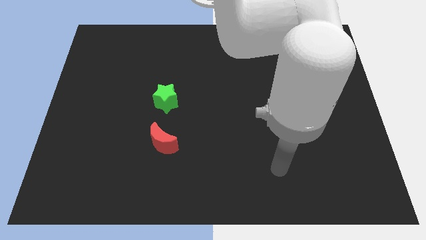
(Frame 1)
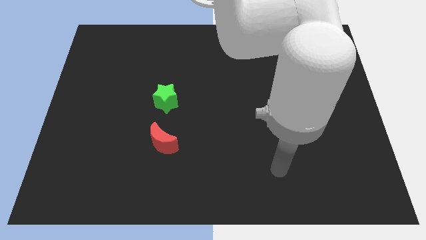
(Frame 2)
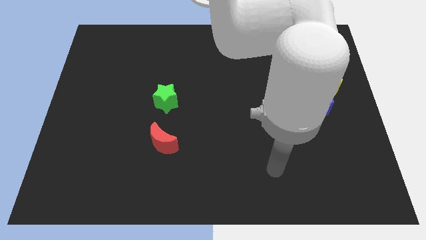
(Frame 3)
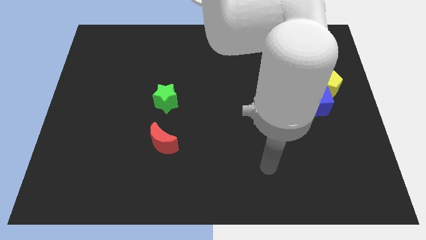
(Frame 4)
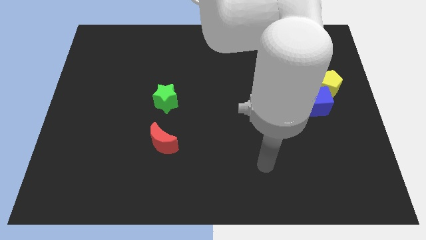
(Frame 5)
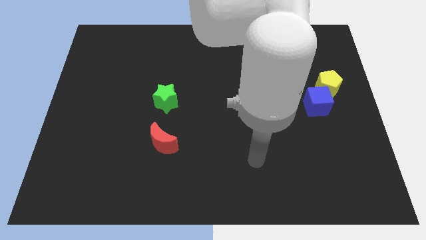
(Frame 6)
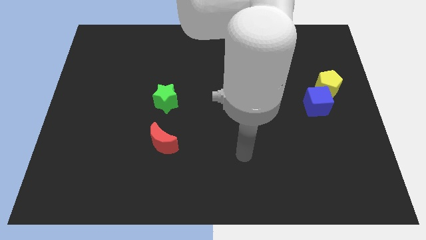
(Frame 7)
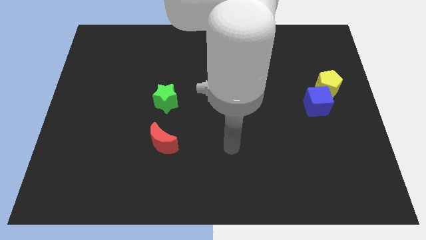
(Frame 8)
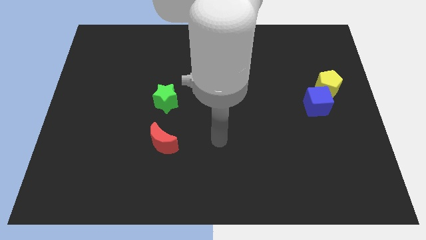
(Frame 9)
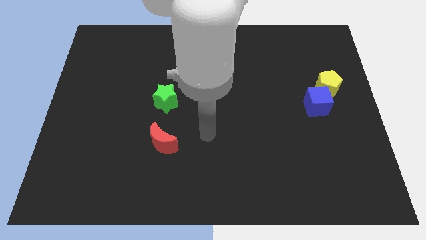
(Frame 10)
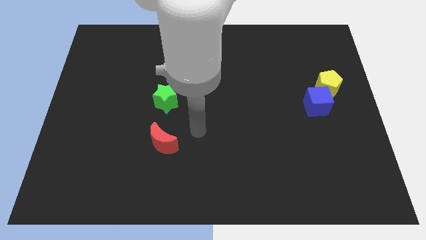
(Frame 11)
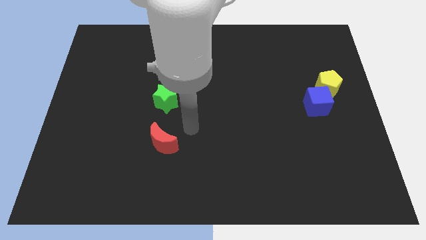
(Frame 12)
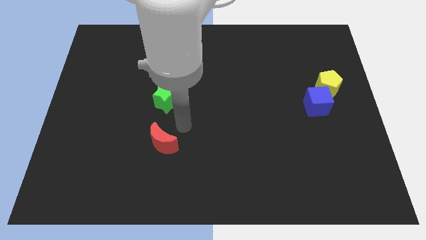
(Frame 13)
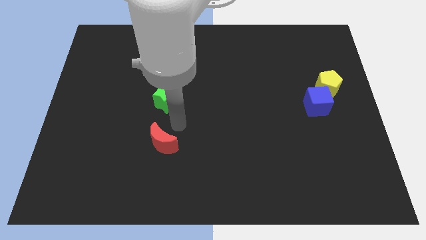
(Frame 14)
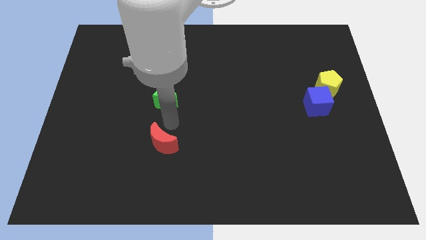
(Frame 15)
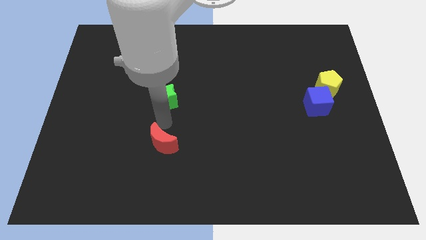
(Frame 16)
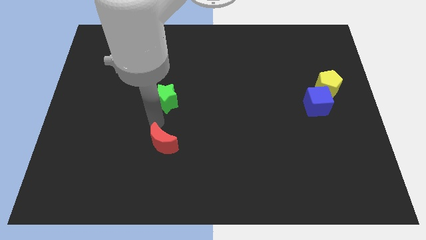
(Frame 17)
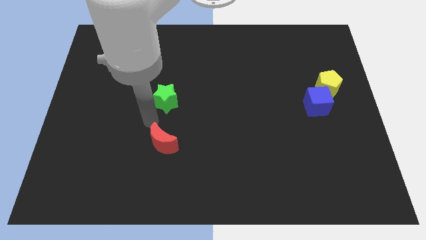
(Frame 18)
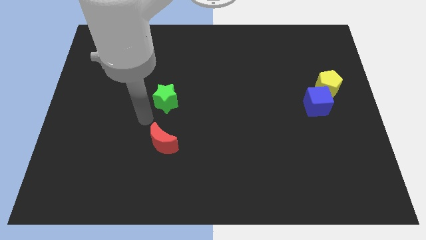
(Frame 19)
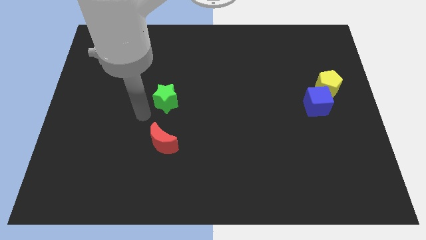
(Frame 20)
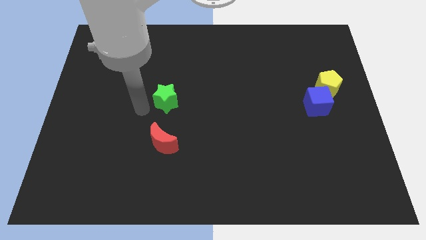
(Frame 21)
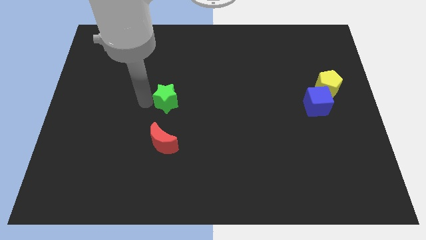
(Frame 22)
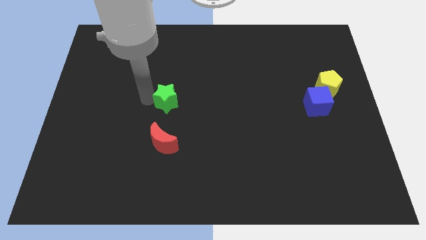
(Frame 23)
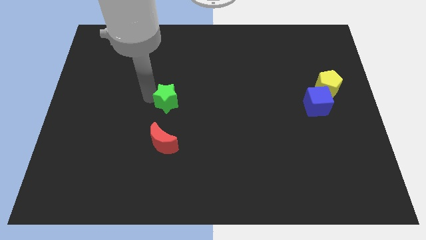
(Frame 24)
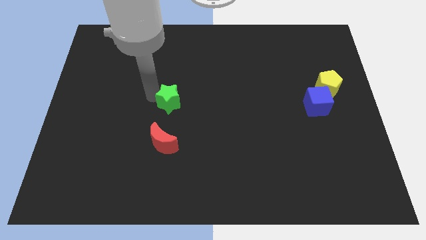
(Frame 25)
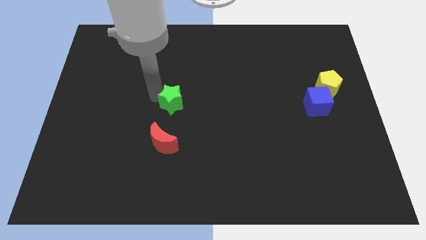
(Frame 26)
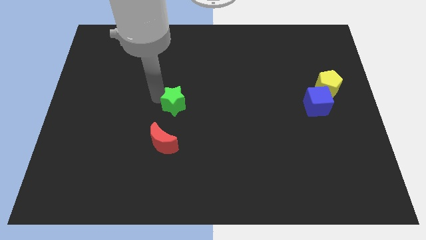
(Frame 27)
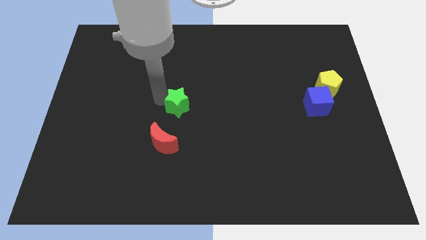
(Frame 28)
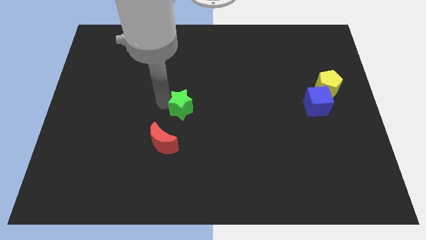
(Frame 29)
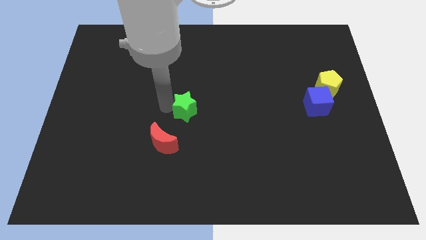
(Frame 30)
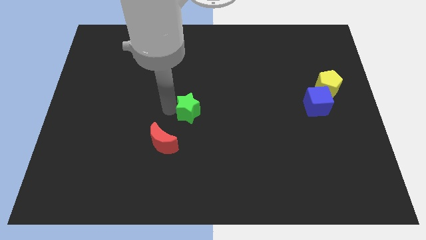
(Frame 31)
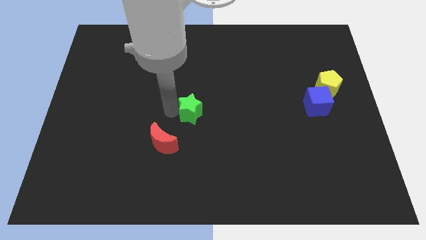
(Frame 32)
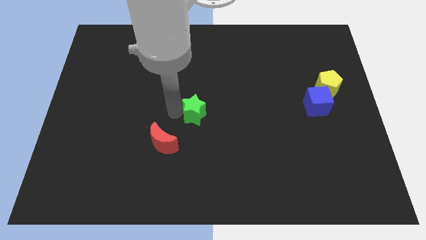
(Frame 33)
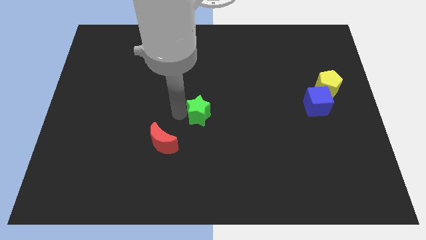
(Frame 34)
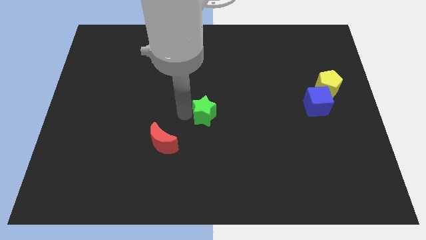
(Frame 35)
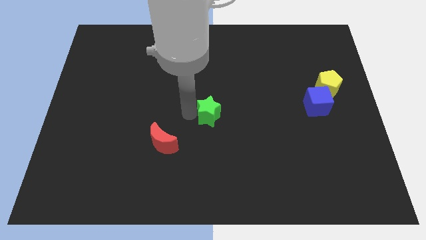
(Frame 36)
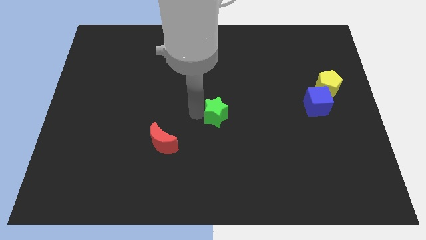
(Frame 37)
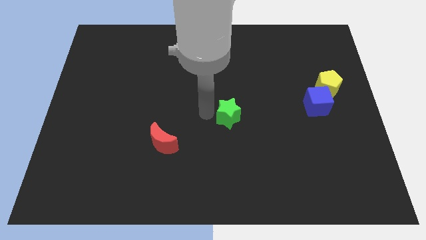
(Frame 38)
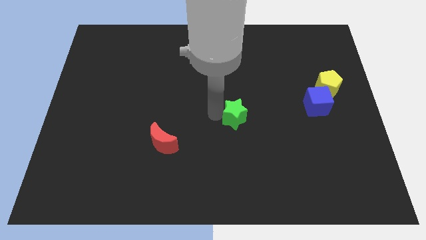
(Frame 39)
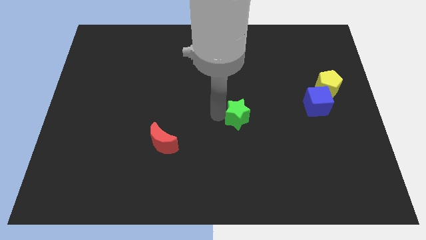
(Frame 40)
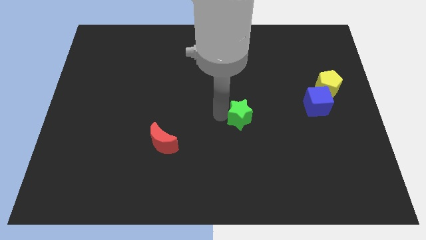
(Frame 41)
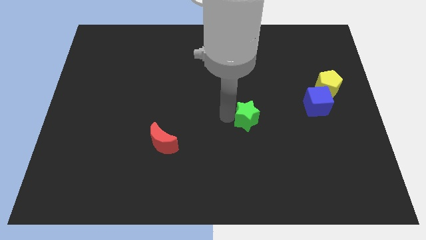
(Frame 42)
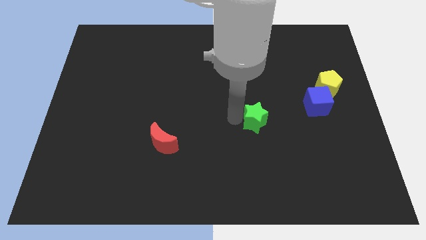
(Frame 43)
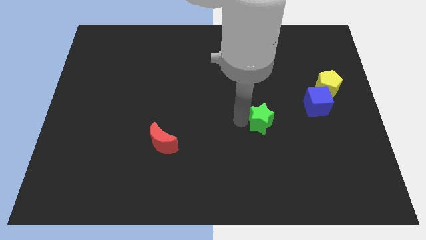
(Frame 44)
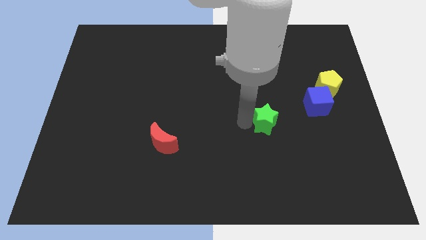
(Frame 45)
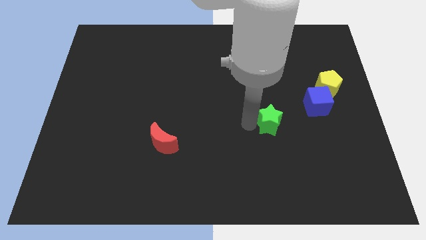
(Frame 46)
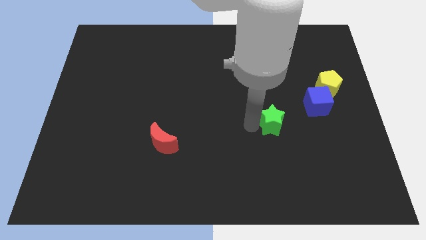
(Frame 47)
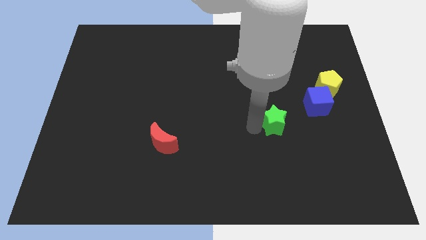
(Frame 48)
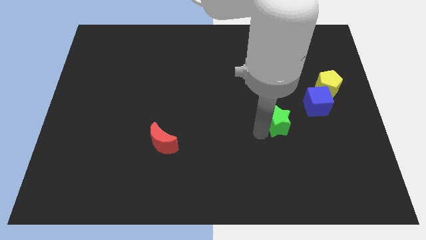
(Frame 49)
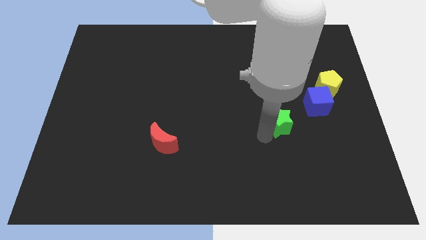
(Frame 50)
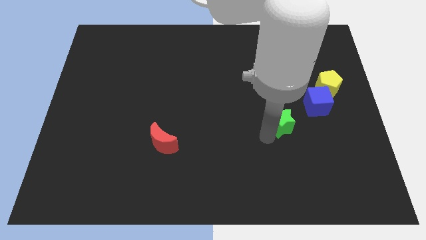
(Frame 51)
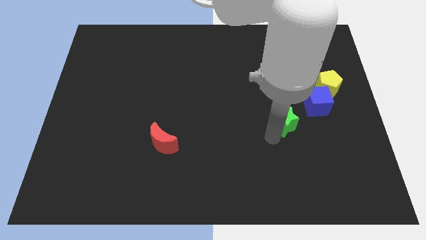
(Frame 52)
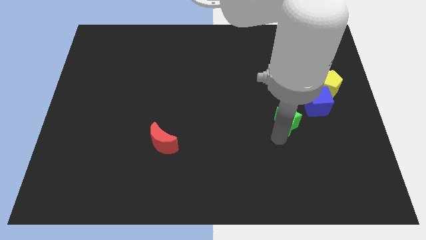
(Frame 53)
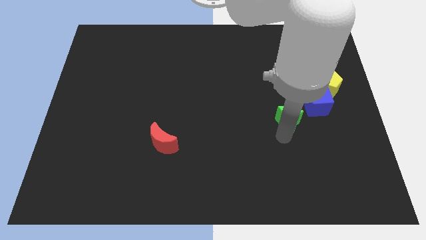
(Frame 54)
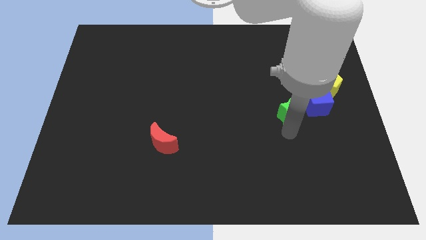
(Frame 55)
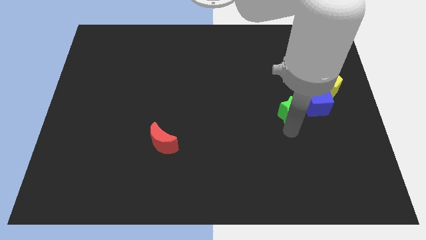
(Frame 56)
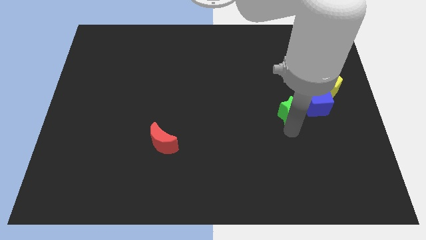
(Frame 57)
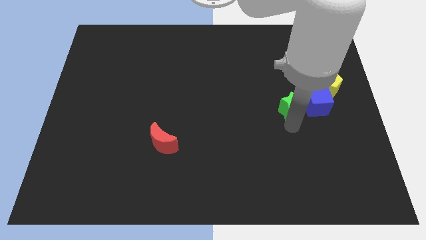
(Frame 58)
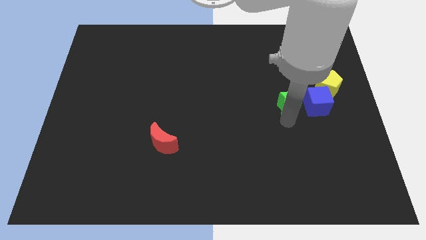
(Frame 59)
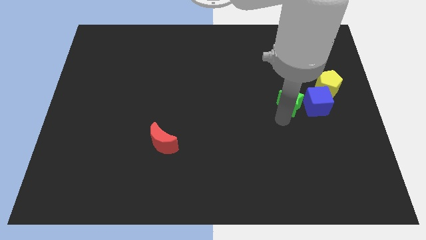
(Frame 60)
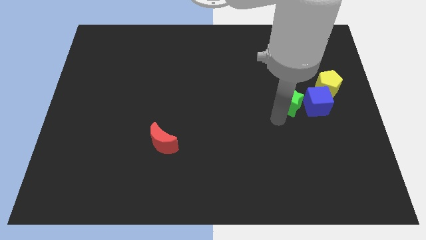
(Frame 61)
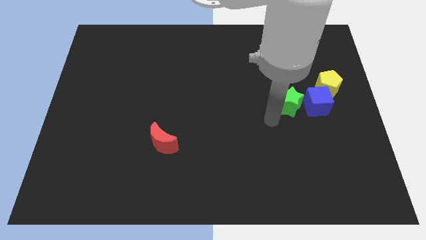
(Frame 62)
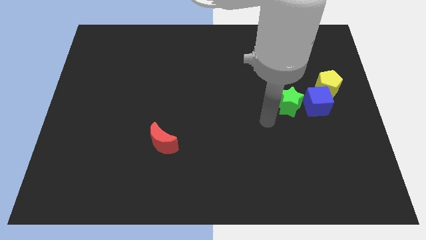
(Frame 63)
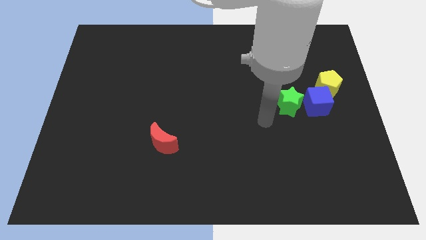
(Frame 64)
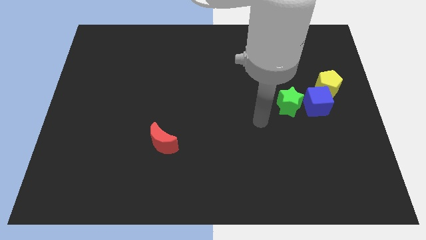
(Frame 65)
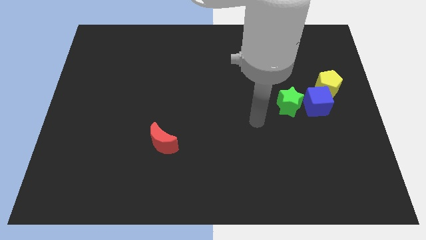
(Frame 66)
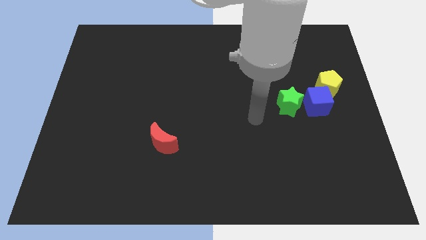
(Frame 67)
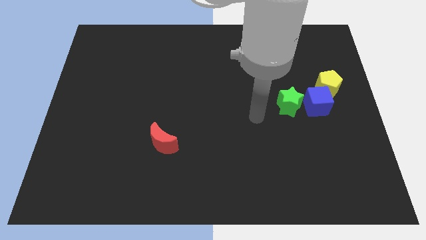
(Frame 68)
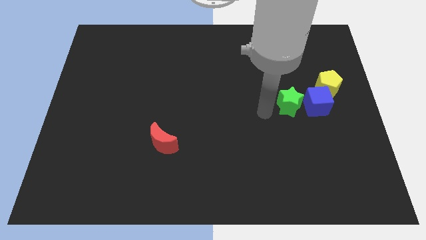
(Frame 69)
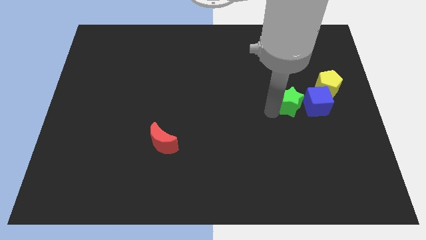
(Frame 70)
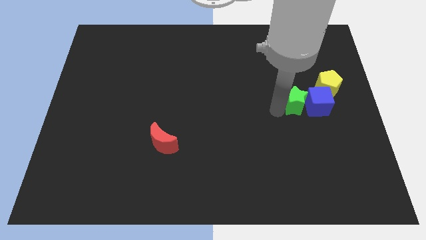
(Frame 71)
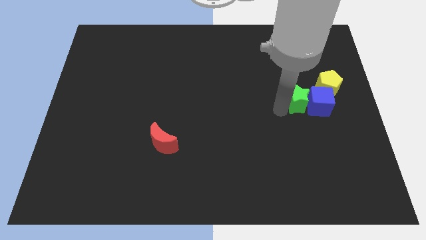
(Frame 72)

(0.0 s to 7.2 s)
put the green star towards the blue cube

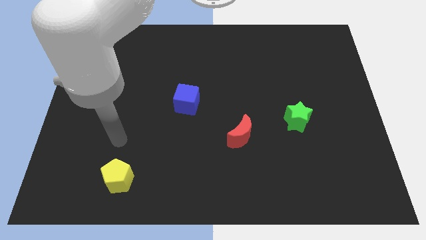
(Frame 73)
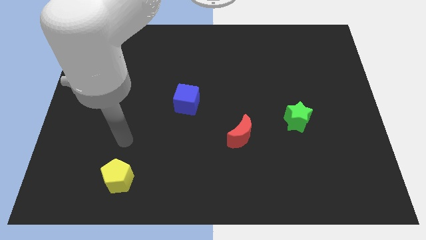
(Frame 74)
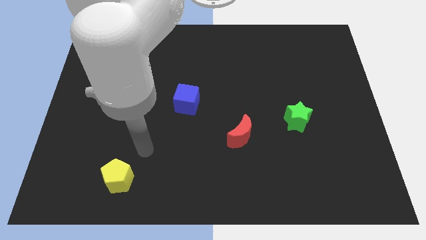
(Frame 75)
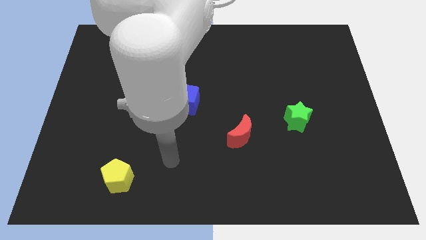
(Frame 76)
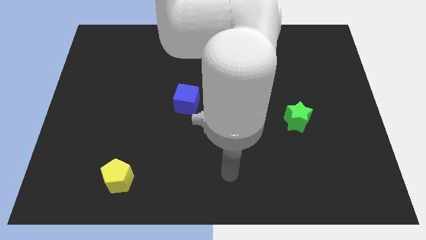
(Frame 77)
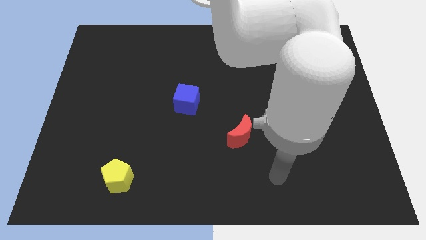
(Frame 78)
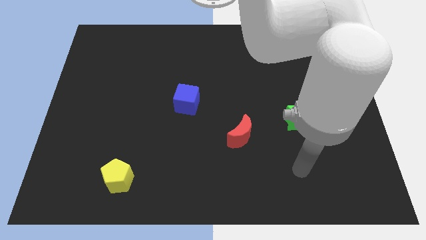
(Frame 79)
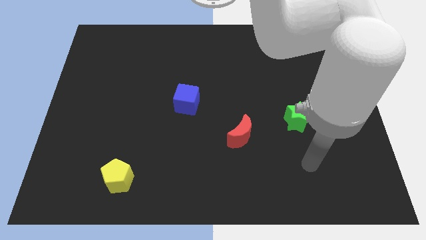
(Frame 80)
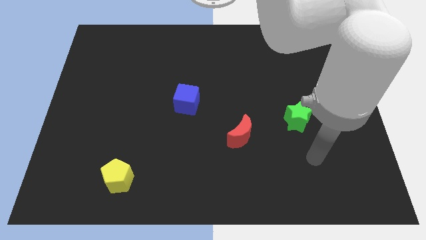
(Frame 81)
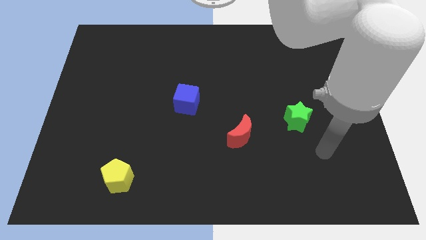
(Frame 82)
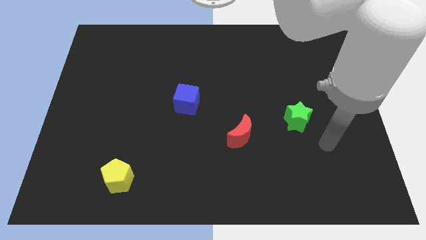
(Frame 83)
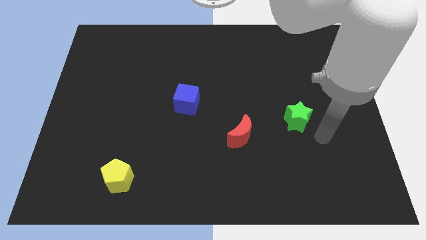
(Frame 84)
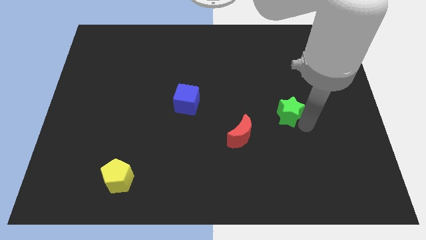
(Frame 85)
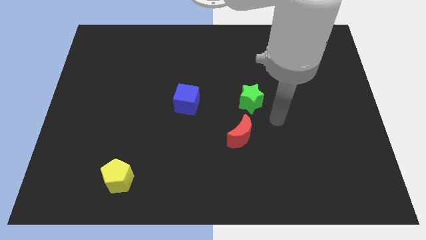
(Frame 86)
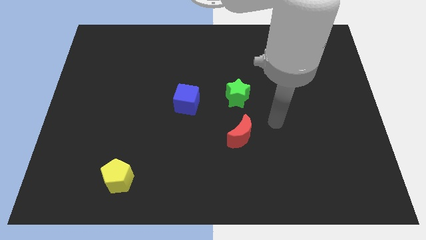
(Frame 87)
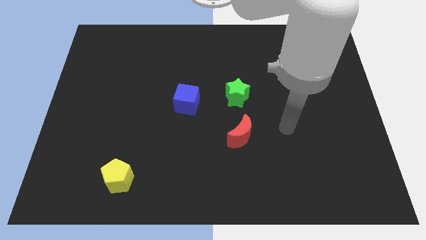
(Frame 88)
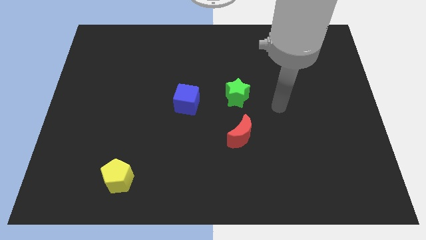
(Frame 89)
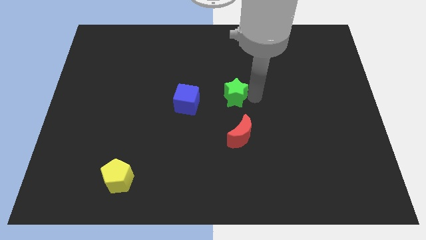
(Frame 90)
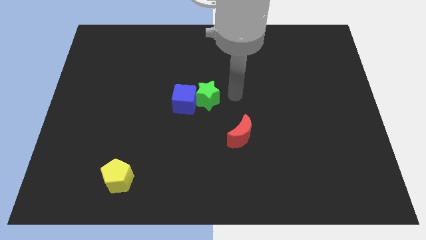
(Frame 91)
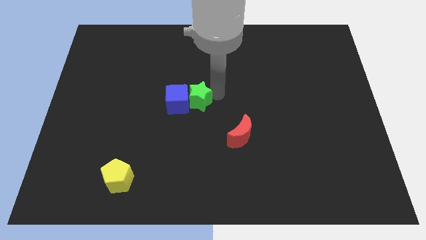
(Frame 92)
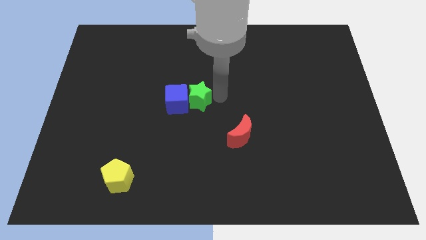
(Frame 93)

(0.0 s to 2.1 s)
push the star to the blue cube
